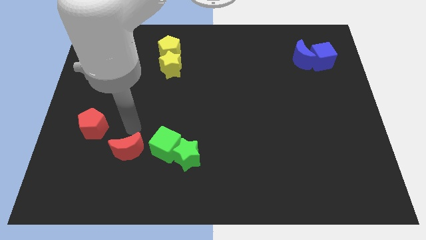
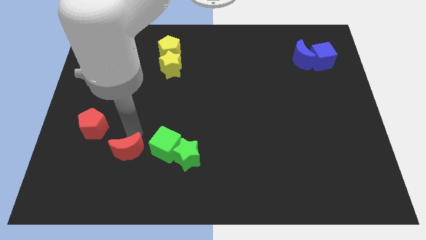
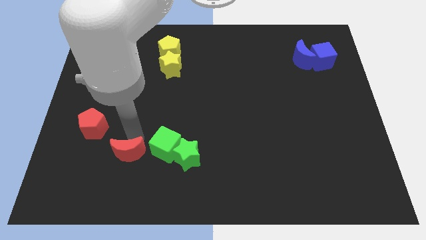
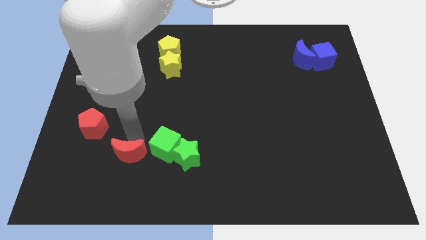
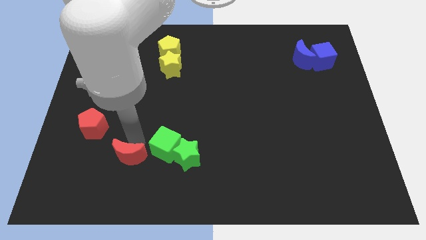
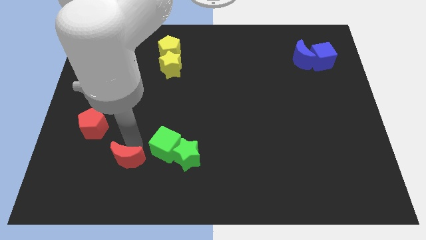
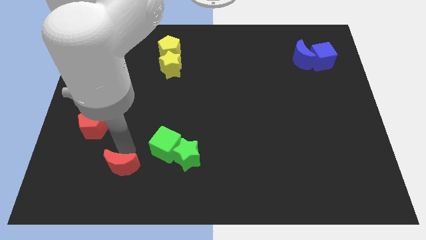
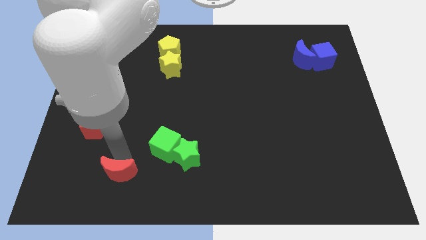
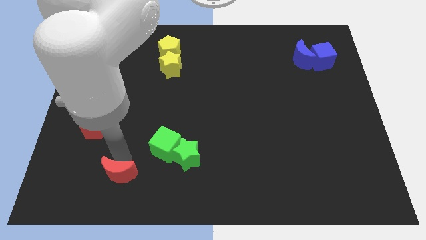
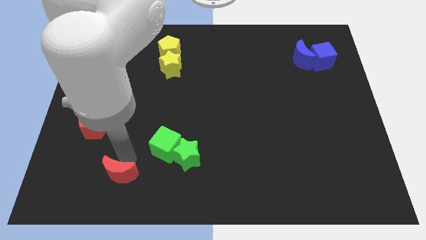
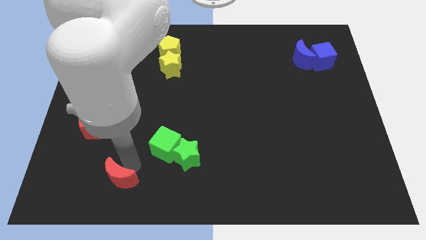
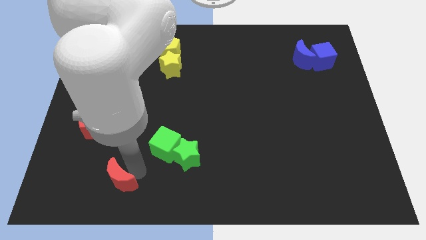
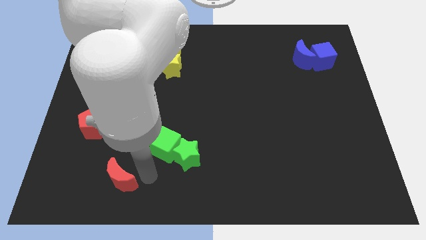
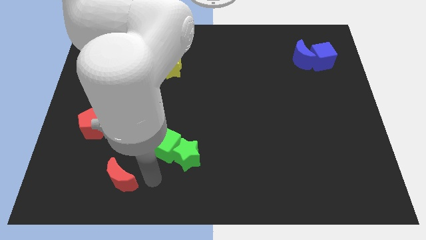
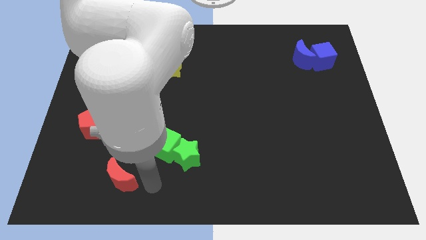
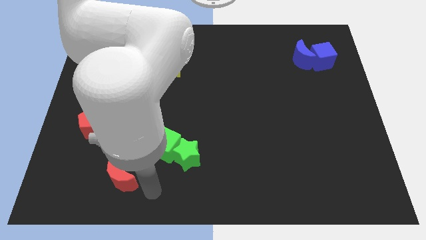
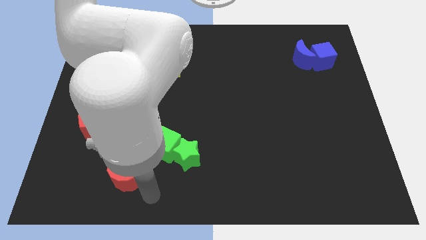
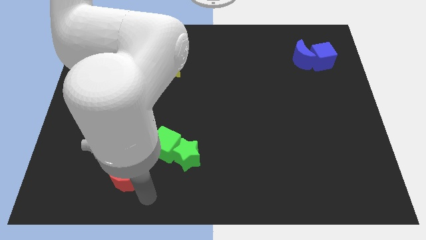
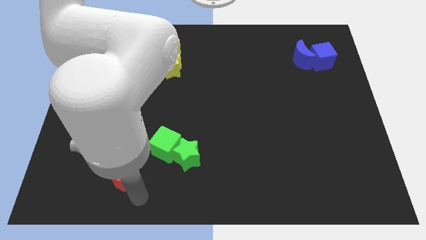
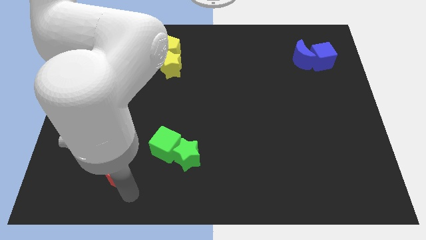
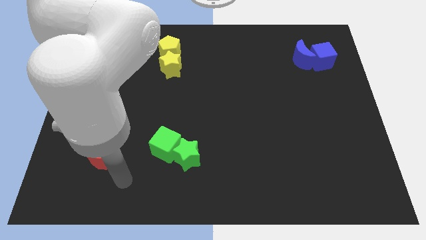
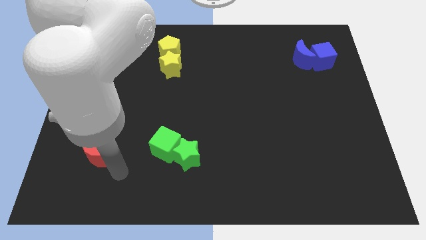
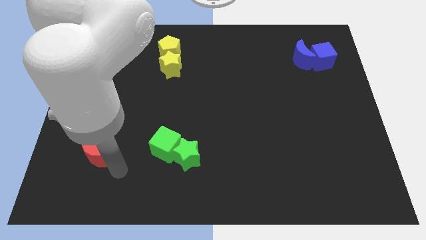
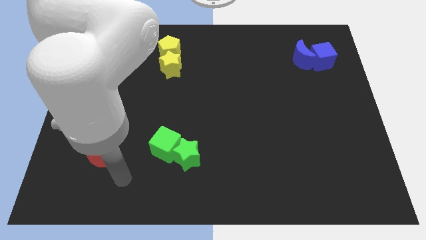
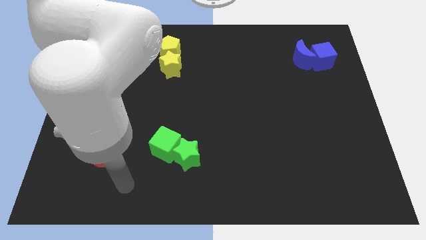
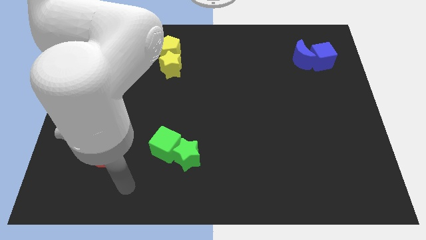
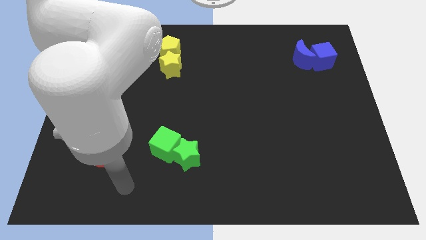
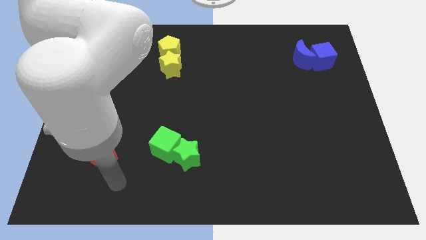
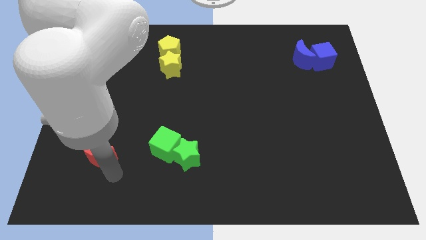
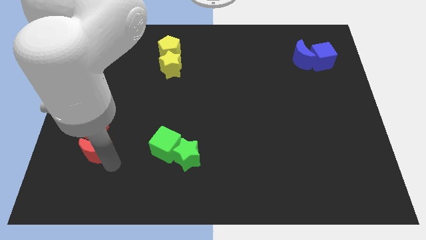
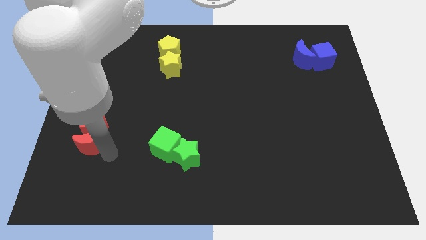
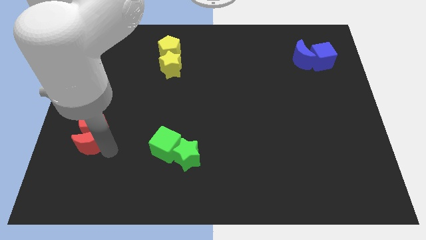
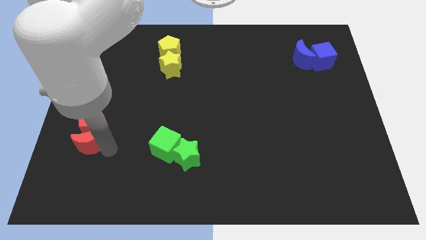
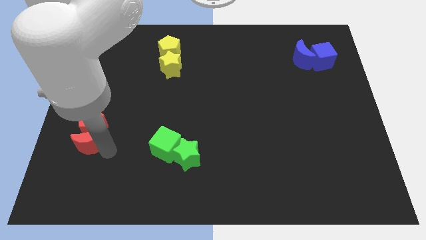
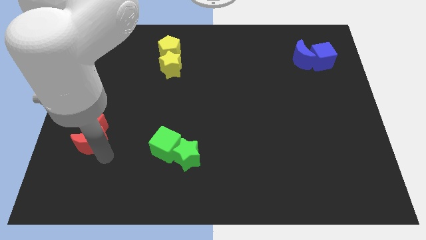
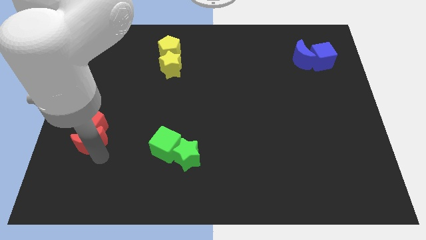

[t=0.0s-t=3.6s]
push red crescent into the red pentagon

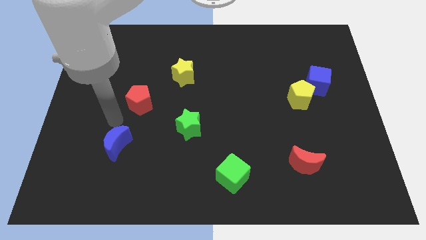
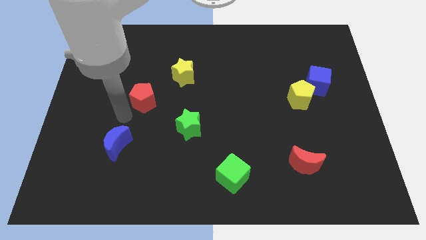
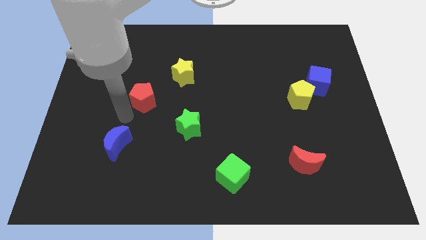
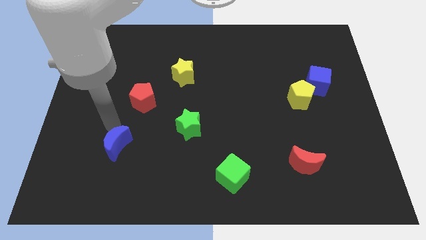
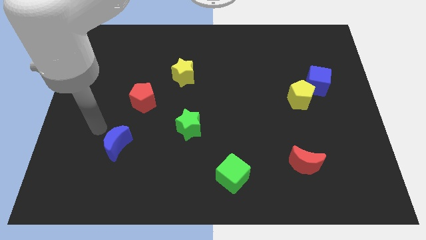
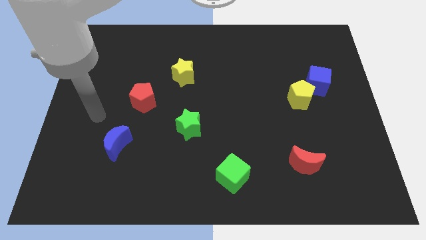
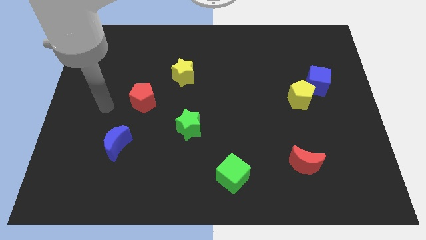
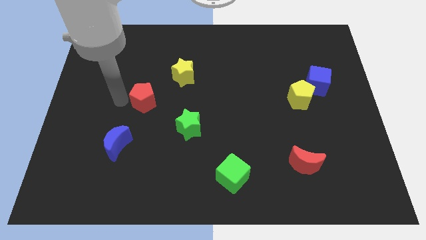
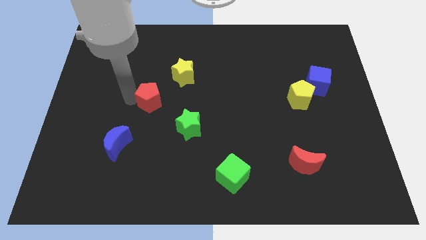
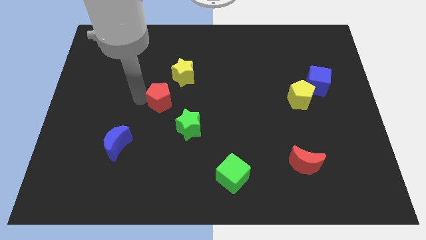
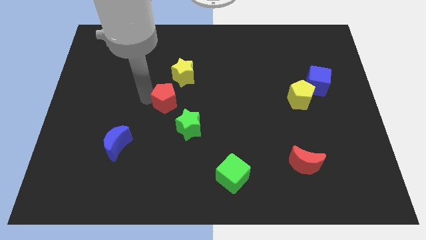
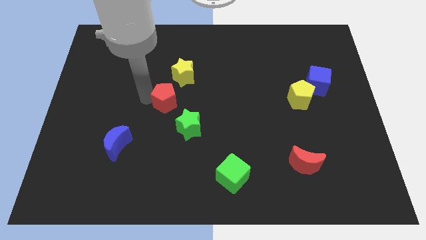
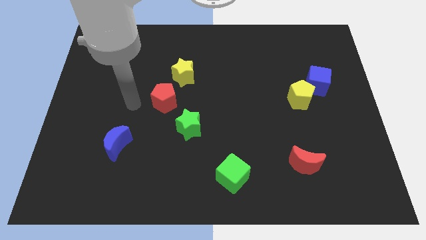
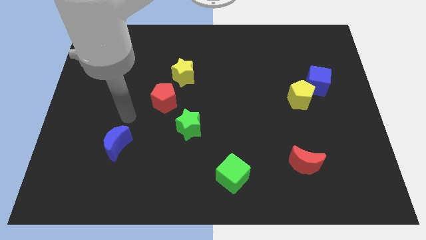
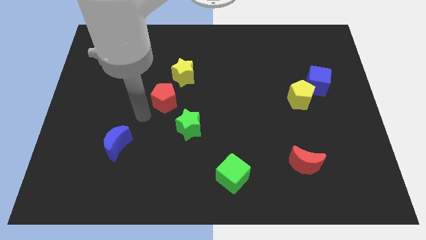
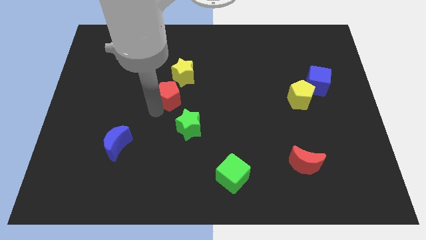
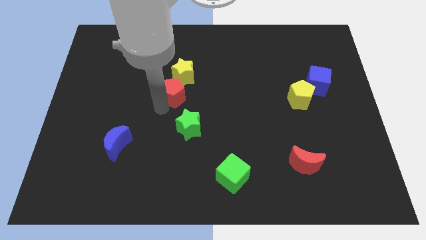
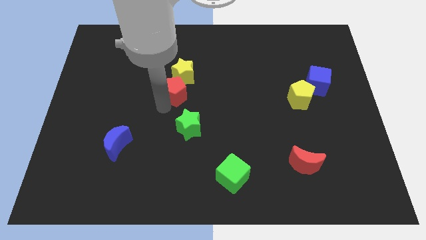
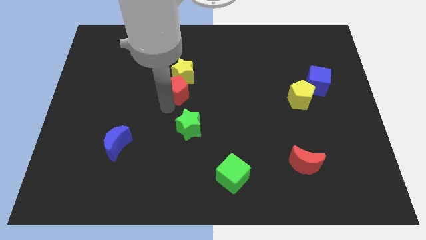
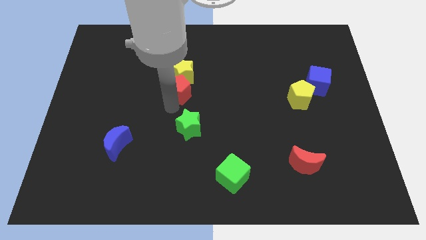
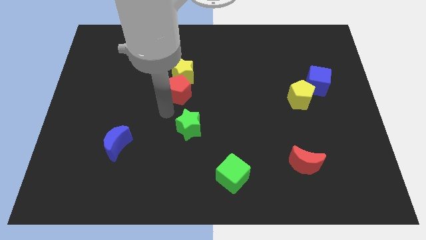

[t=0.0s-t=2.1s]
slide red pentagon into yellow star

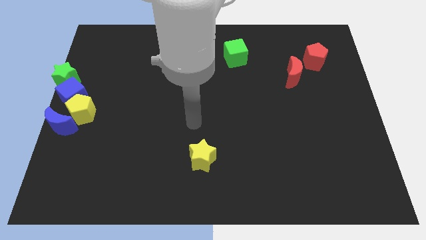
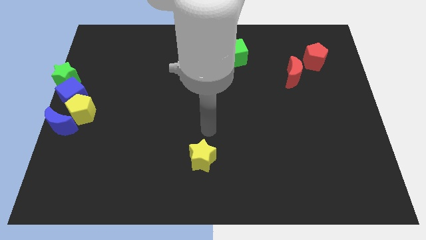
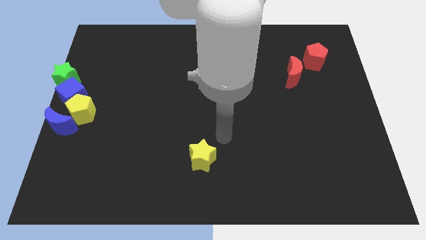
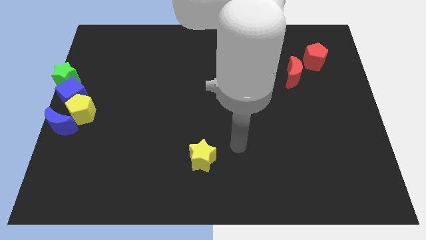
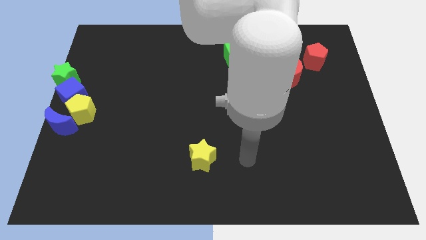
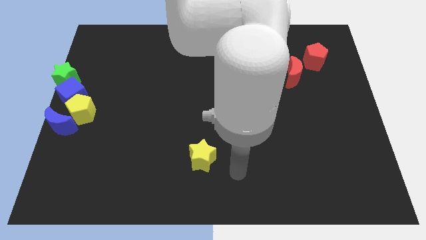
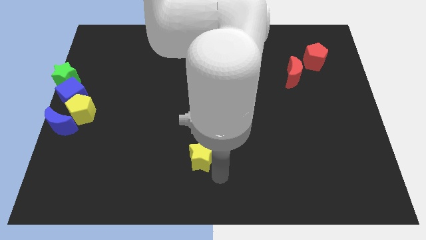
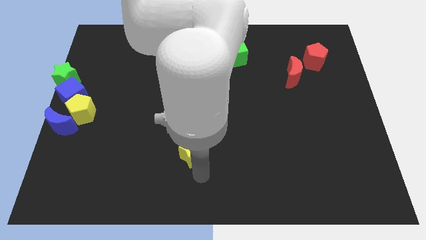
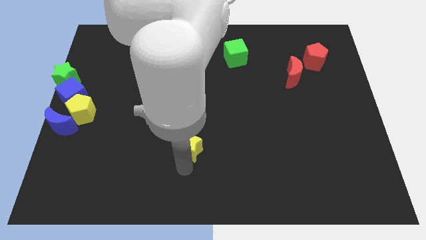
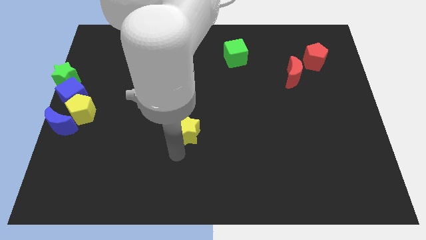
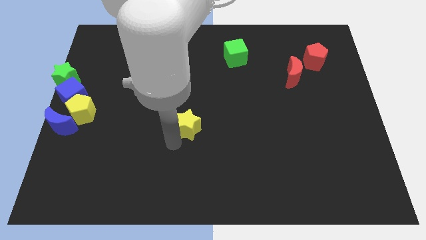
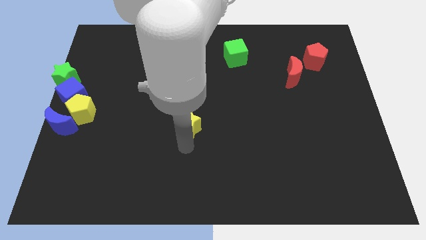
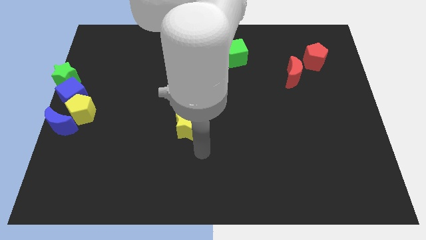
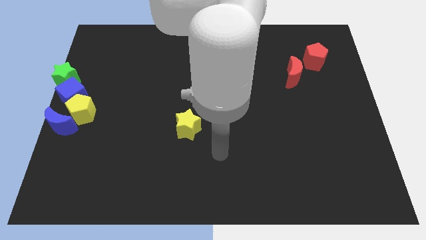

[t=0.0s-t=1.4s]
move the yellow star up slightly

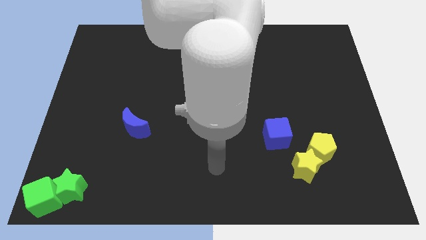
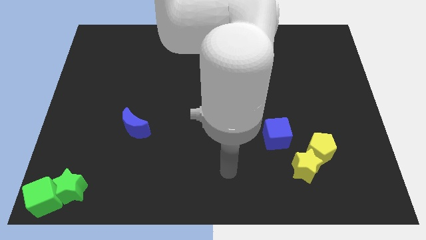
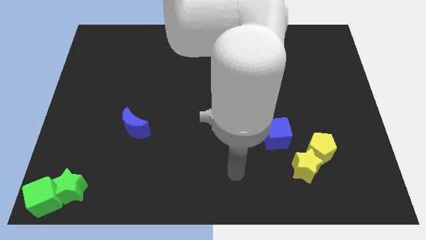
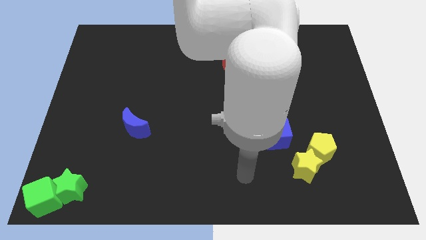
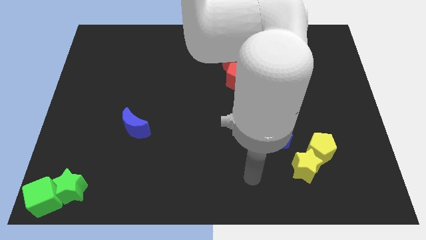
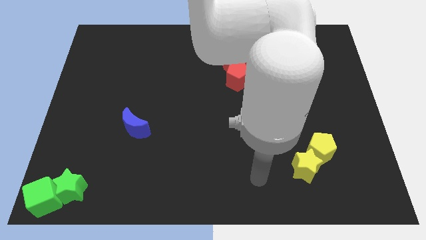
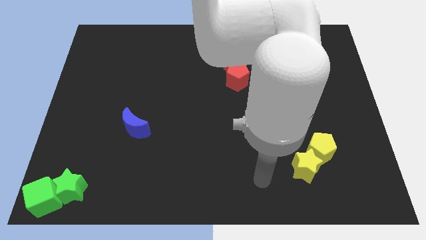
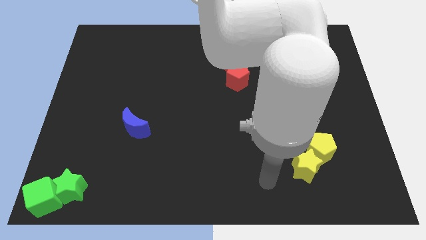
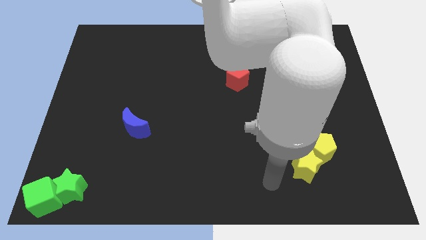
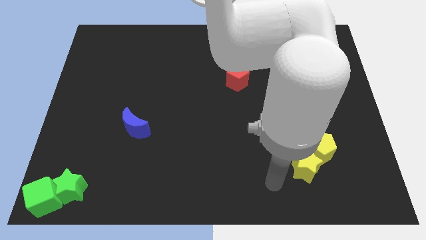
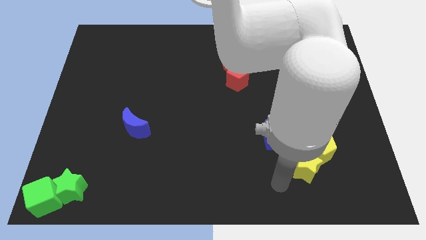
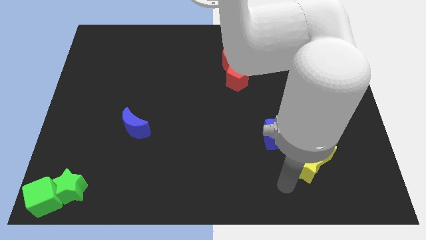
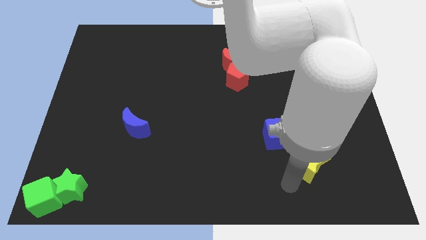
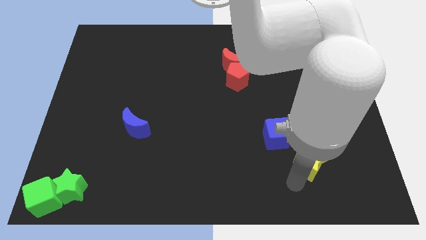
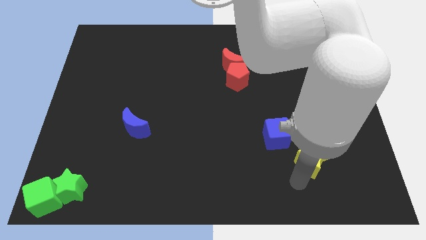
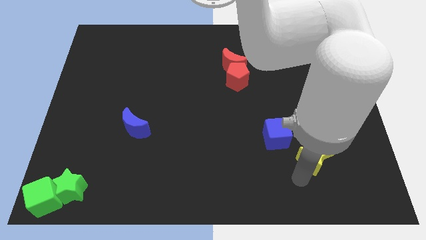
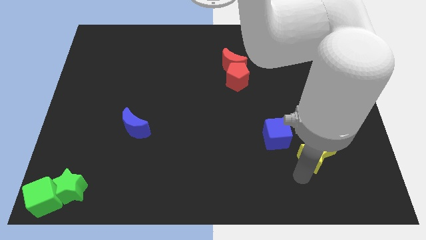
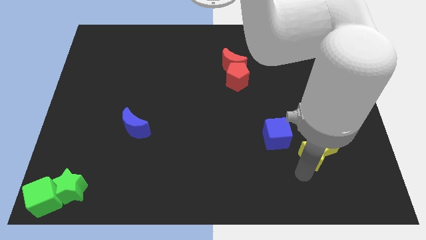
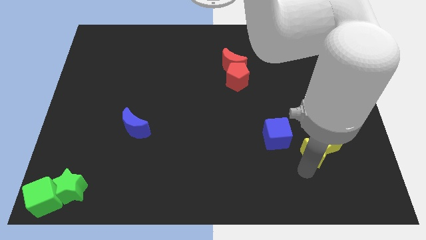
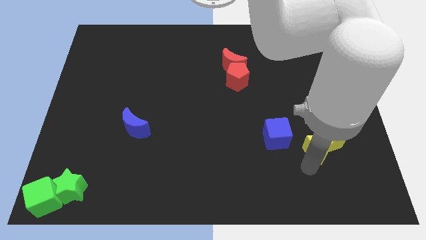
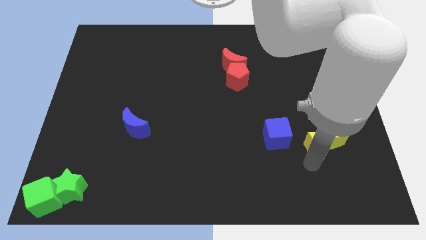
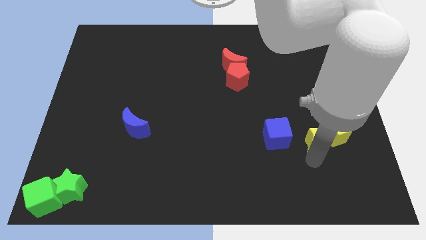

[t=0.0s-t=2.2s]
push the yellow blocks towards the center right side of the board
